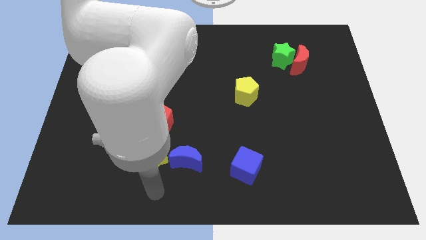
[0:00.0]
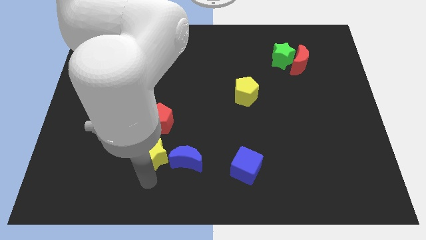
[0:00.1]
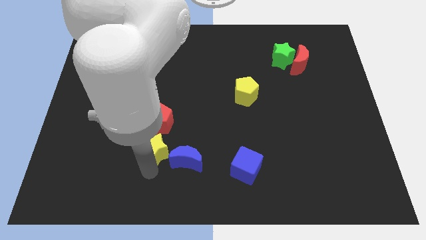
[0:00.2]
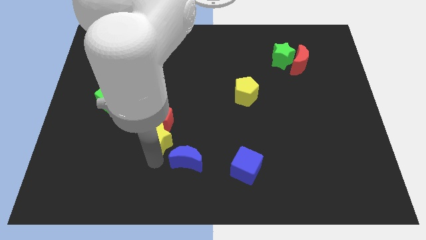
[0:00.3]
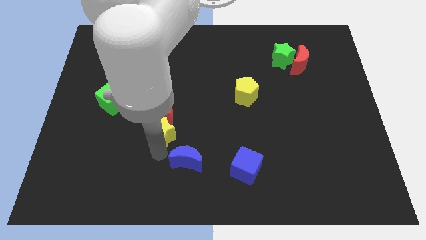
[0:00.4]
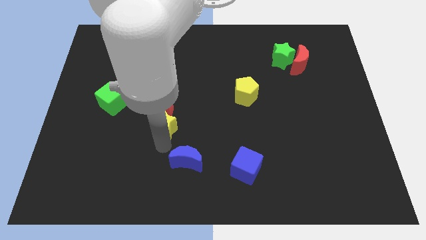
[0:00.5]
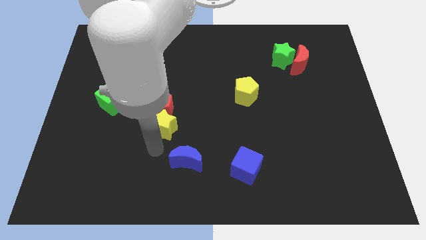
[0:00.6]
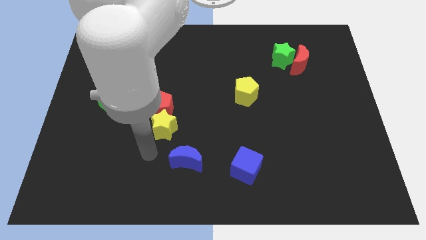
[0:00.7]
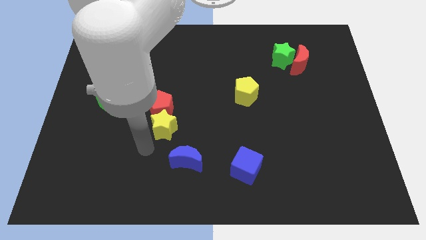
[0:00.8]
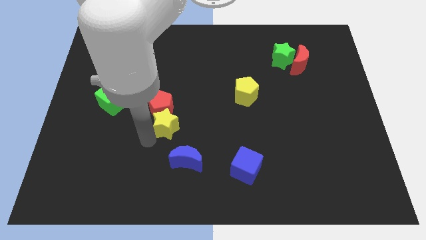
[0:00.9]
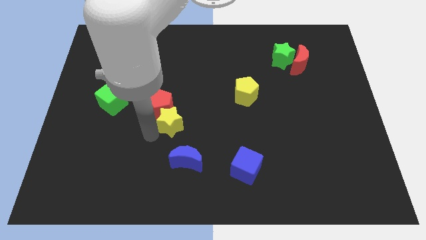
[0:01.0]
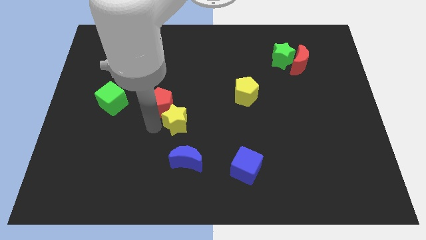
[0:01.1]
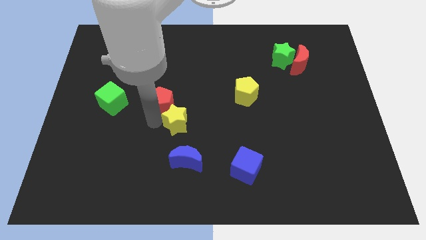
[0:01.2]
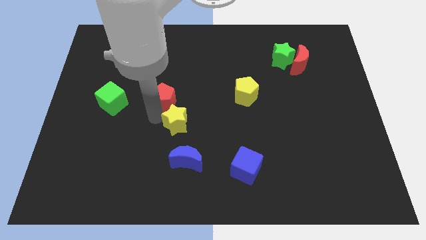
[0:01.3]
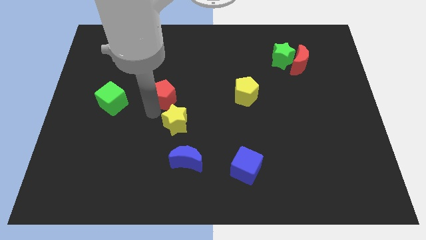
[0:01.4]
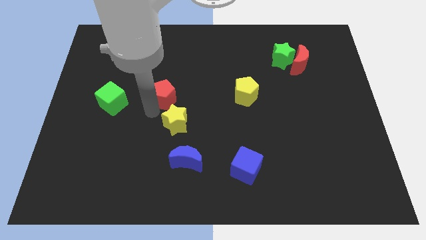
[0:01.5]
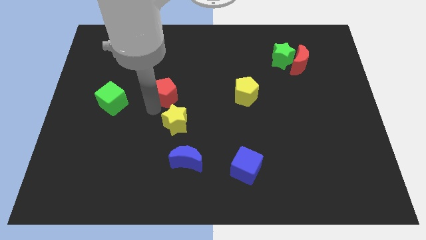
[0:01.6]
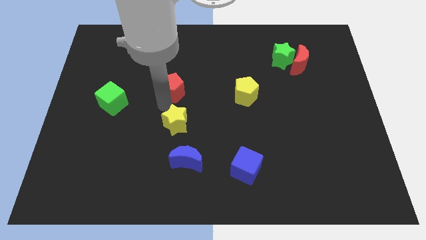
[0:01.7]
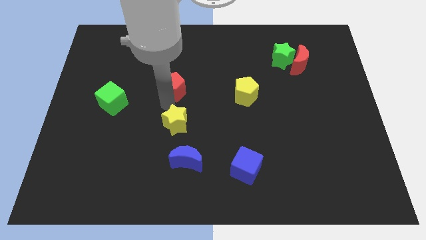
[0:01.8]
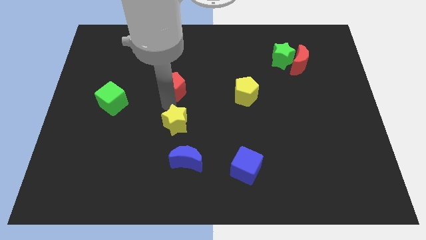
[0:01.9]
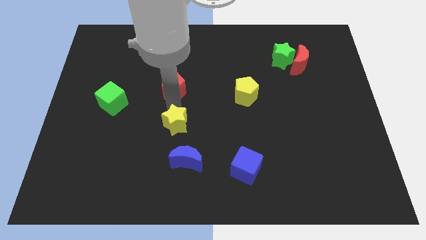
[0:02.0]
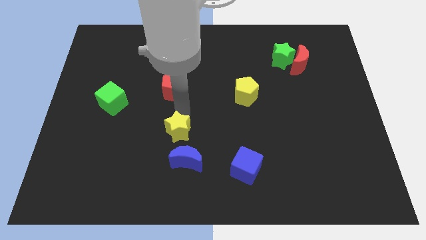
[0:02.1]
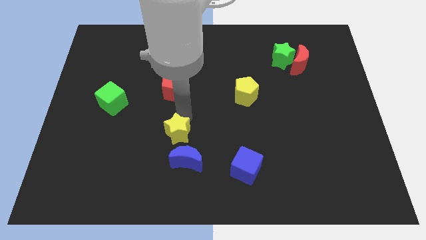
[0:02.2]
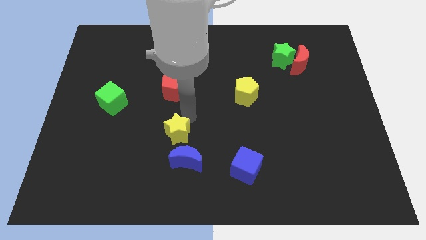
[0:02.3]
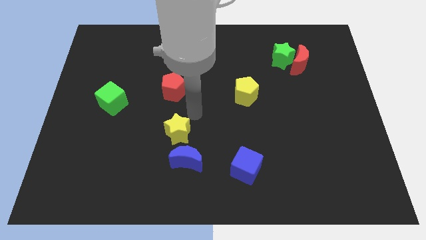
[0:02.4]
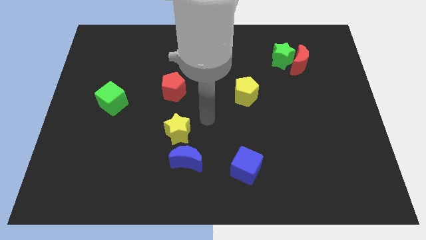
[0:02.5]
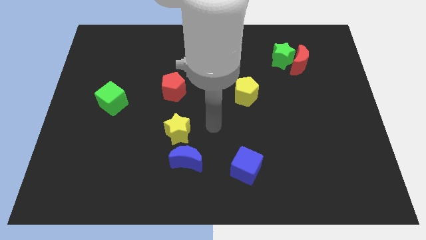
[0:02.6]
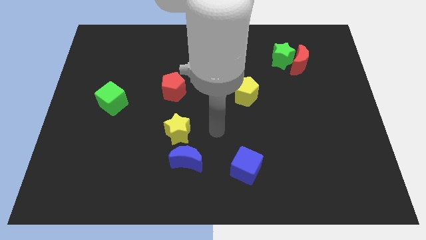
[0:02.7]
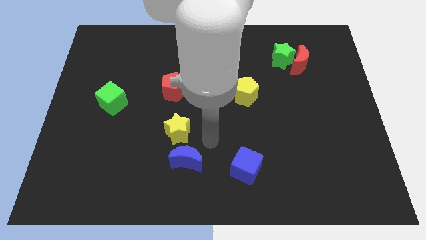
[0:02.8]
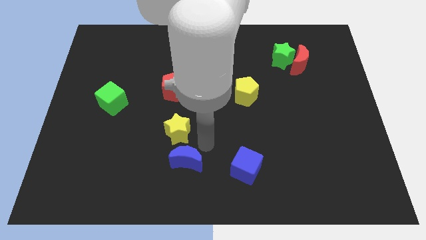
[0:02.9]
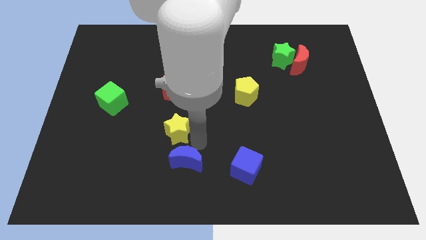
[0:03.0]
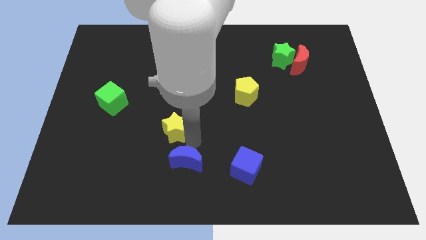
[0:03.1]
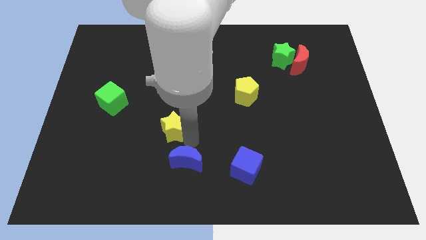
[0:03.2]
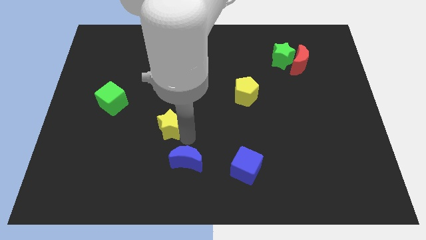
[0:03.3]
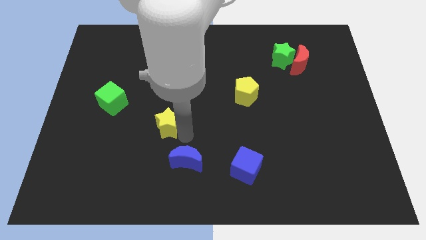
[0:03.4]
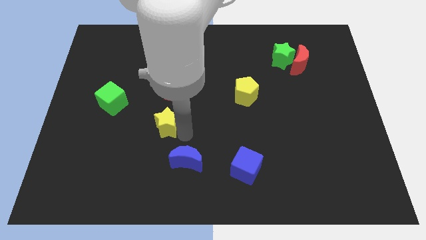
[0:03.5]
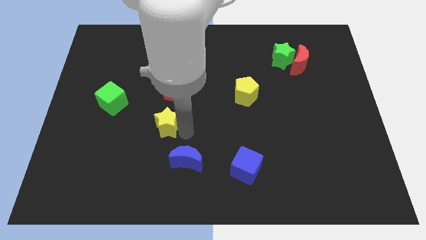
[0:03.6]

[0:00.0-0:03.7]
push the yellow star vertically below the red pentagon

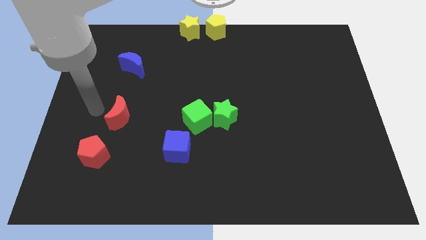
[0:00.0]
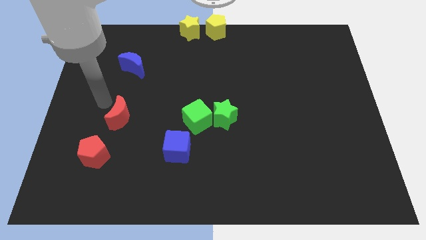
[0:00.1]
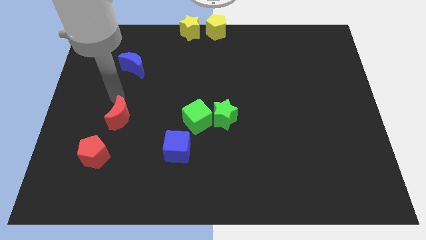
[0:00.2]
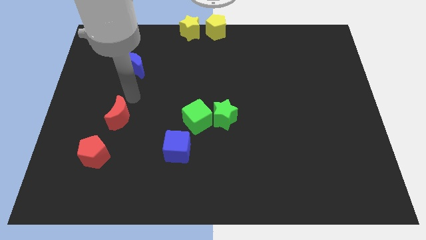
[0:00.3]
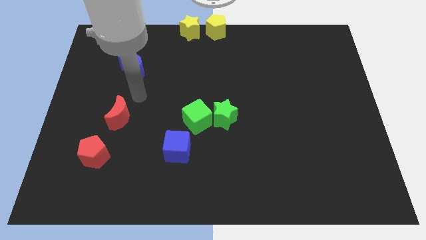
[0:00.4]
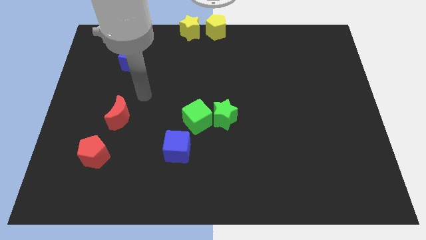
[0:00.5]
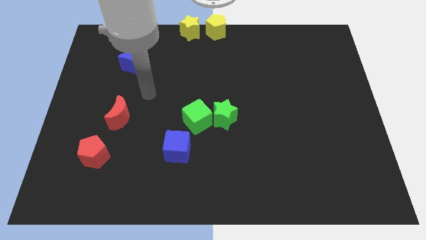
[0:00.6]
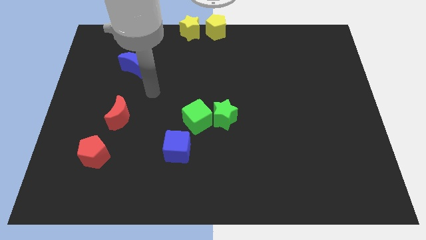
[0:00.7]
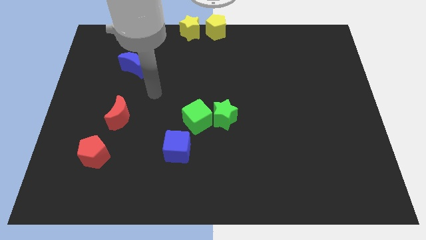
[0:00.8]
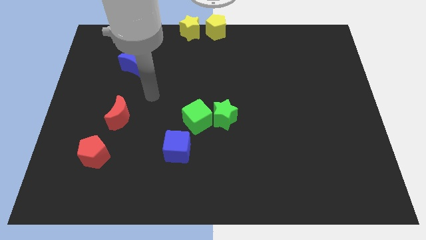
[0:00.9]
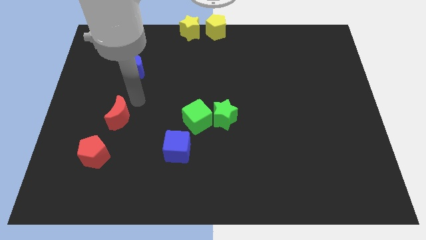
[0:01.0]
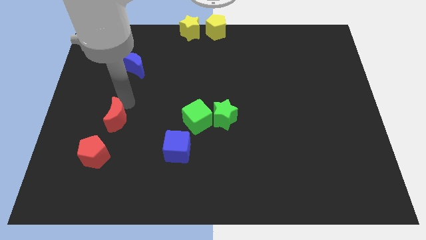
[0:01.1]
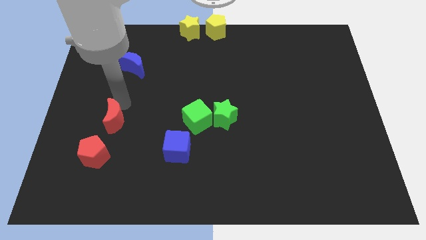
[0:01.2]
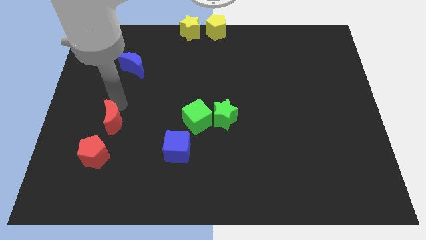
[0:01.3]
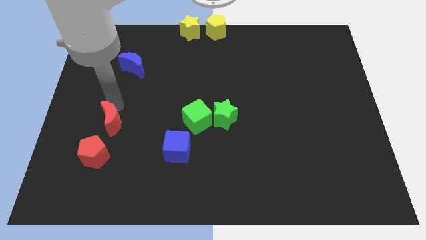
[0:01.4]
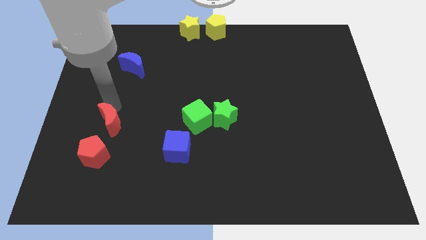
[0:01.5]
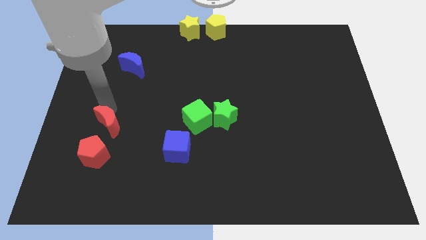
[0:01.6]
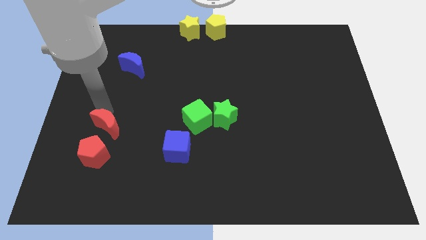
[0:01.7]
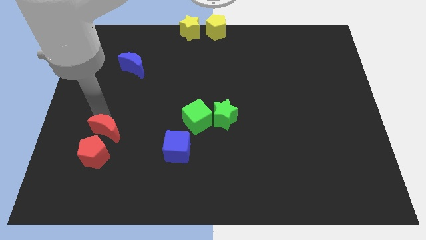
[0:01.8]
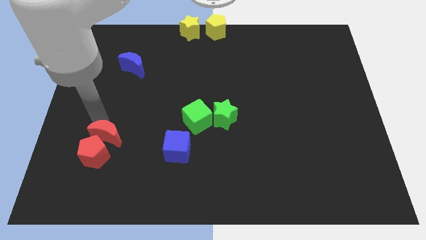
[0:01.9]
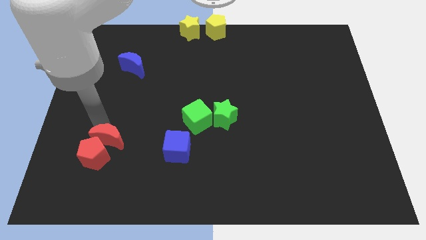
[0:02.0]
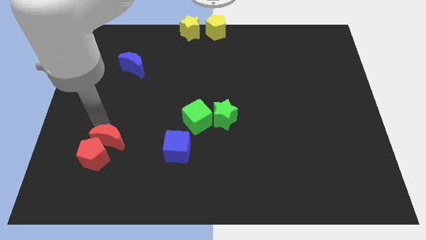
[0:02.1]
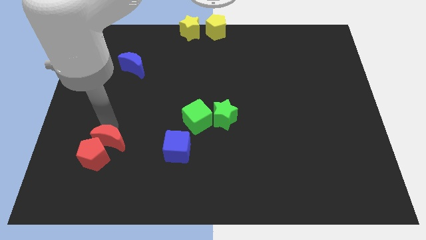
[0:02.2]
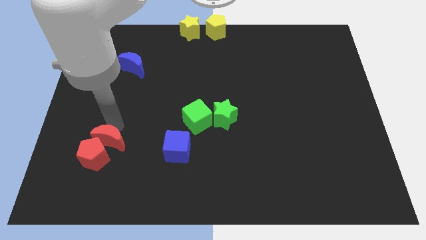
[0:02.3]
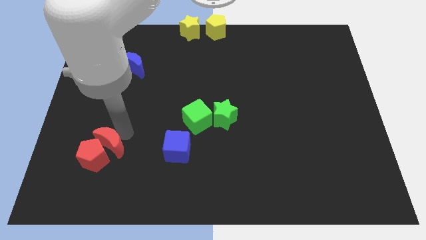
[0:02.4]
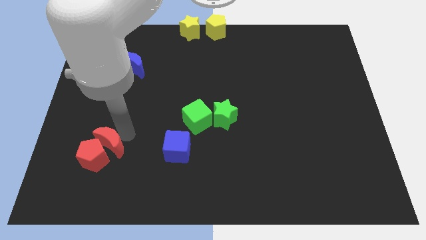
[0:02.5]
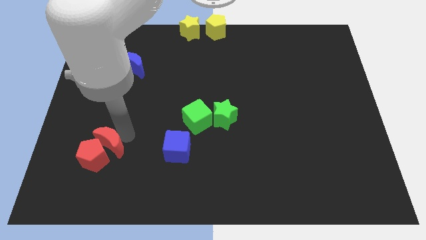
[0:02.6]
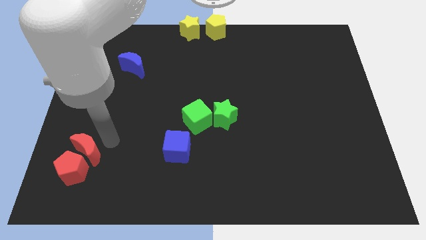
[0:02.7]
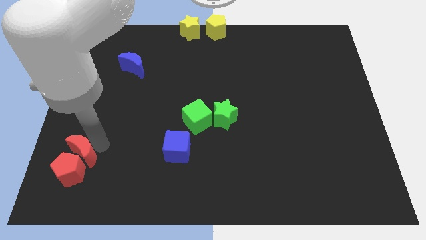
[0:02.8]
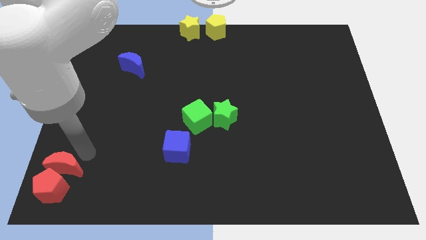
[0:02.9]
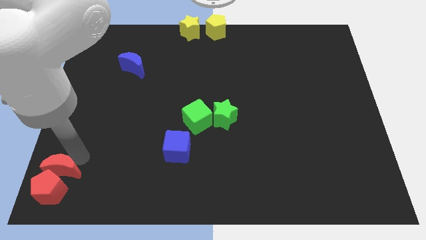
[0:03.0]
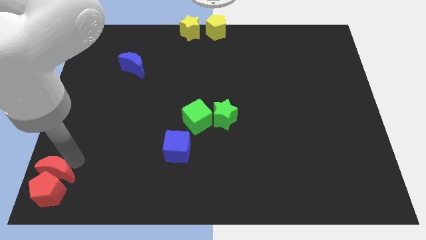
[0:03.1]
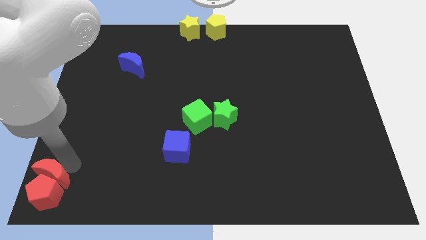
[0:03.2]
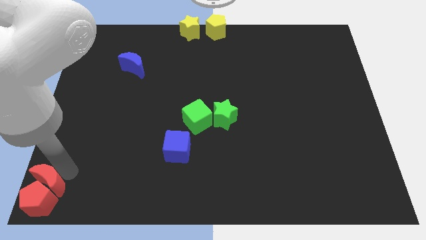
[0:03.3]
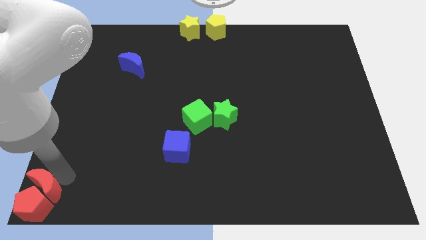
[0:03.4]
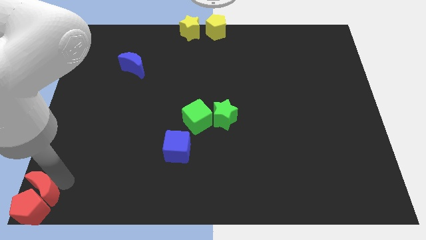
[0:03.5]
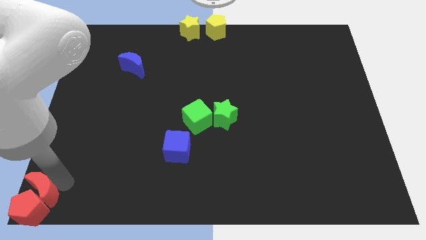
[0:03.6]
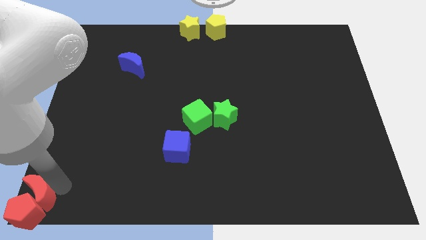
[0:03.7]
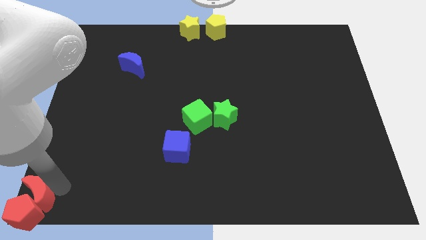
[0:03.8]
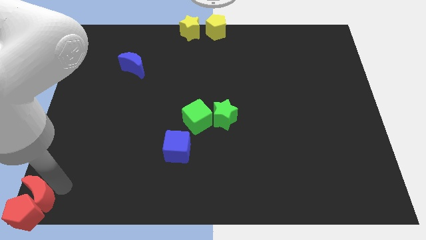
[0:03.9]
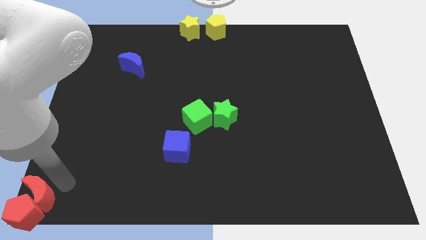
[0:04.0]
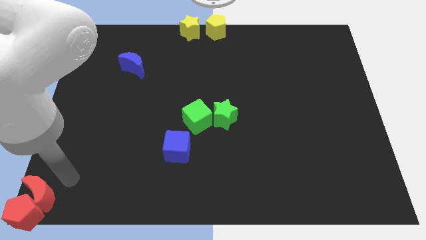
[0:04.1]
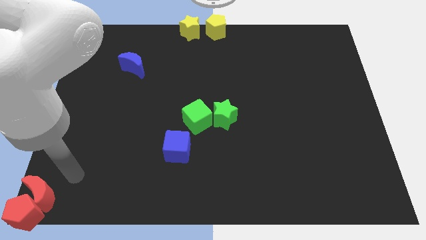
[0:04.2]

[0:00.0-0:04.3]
put both the red blocks at the bottom left corner of the board

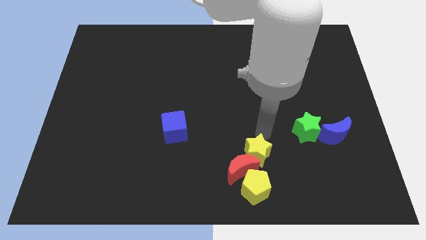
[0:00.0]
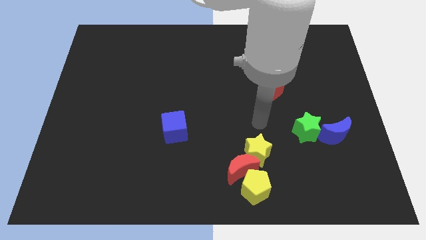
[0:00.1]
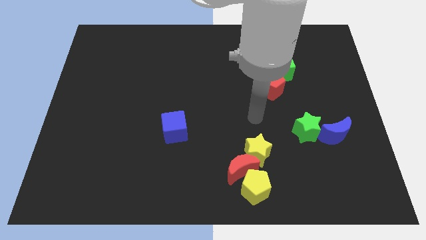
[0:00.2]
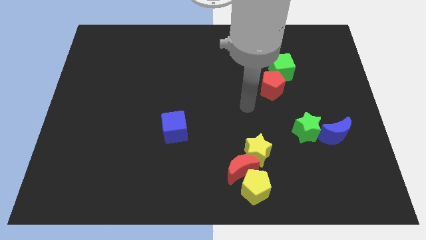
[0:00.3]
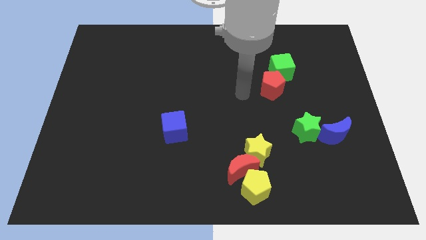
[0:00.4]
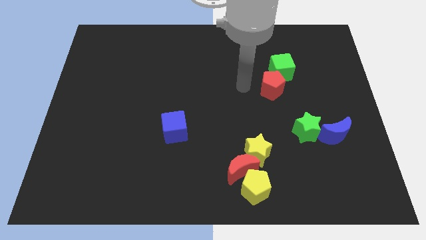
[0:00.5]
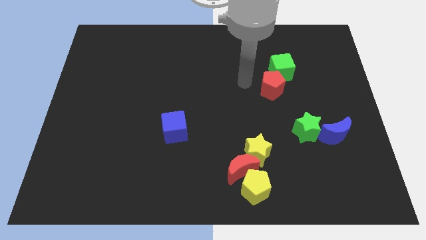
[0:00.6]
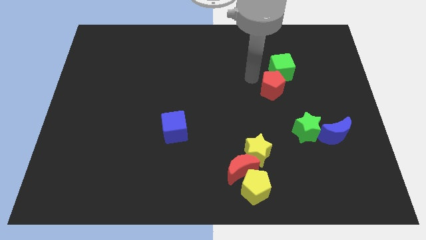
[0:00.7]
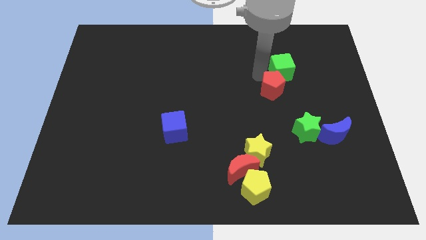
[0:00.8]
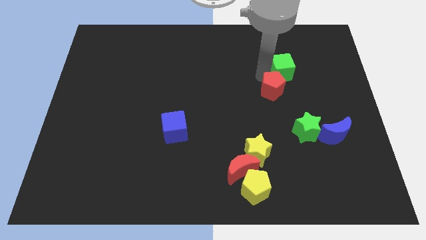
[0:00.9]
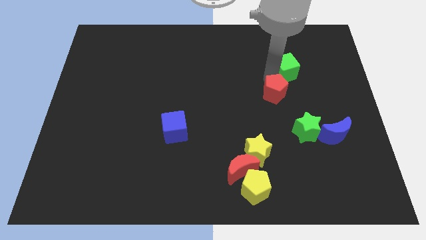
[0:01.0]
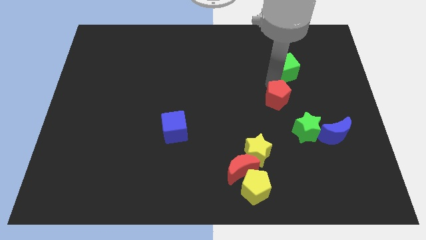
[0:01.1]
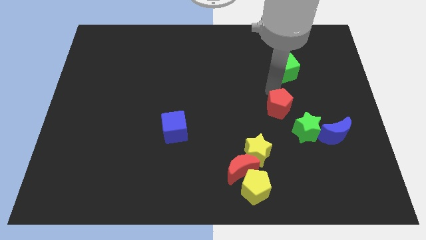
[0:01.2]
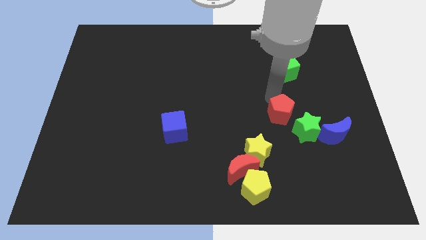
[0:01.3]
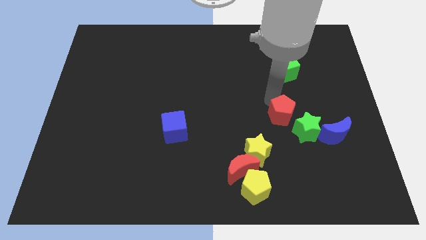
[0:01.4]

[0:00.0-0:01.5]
separate the red pentagon from the green cube
